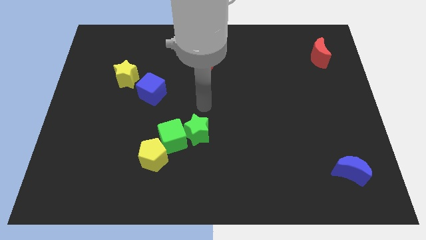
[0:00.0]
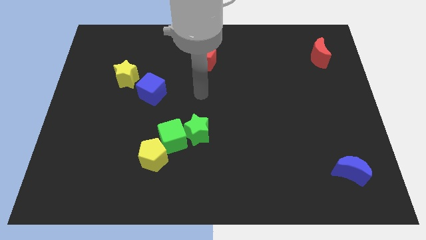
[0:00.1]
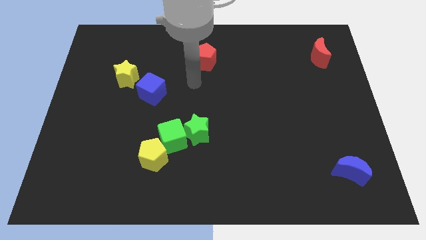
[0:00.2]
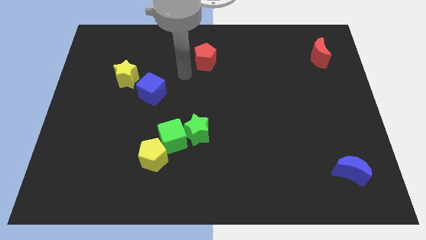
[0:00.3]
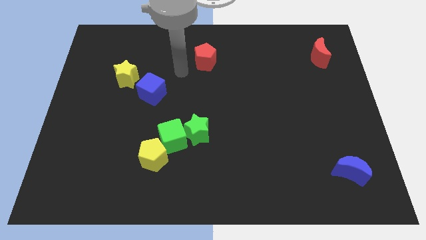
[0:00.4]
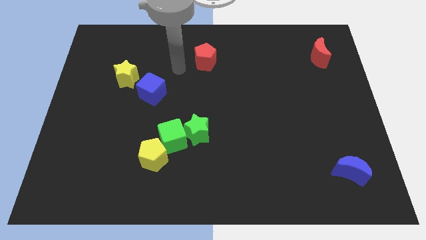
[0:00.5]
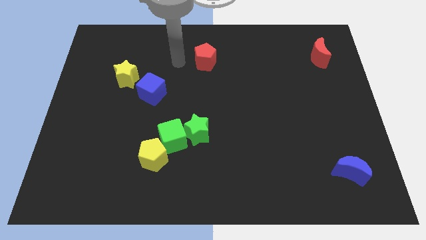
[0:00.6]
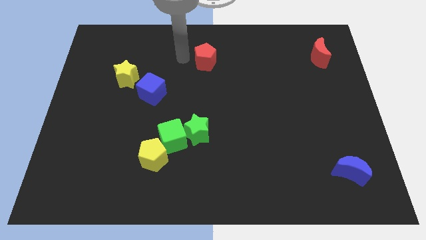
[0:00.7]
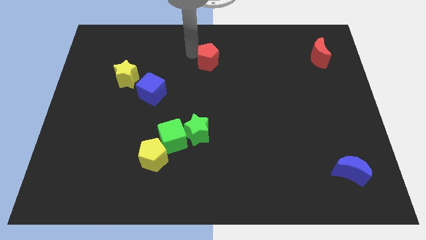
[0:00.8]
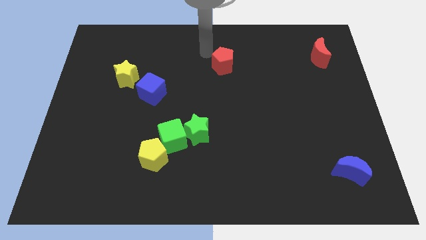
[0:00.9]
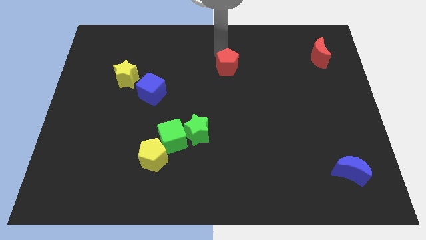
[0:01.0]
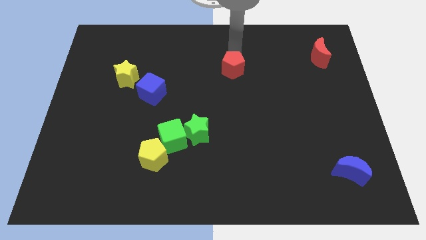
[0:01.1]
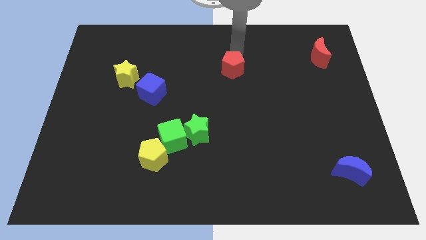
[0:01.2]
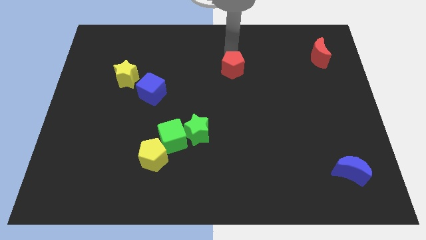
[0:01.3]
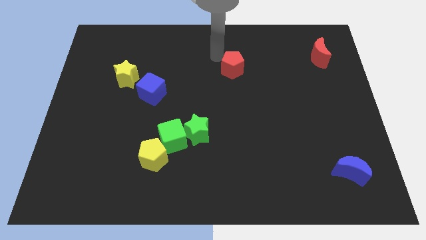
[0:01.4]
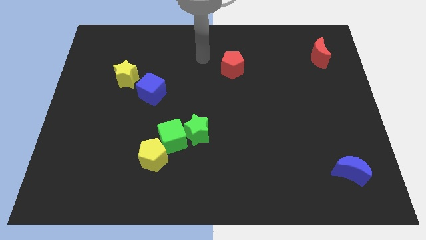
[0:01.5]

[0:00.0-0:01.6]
move the red pentagon parallel to the red crescent

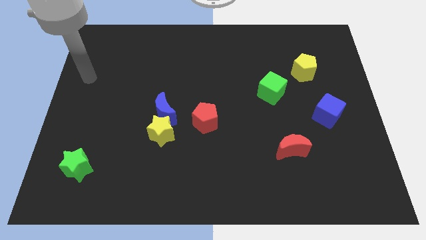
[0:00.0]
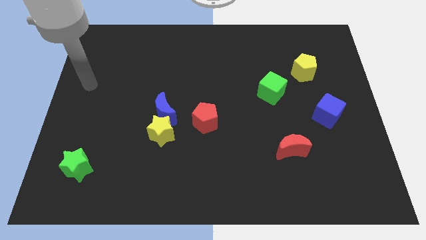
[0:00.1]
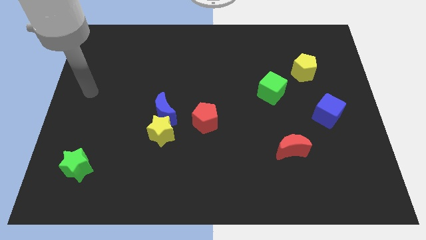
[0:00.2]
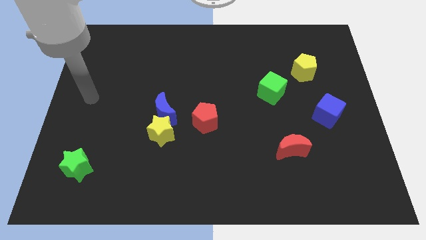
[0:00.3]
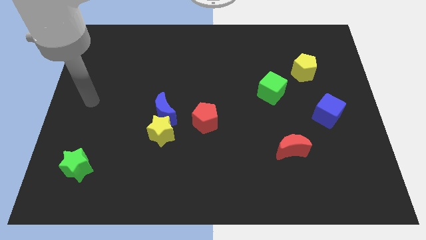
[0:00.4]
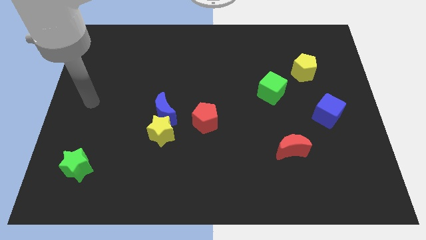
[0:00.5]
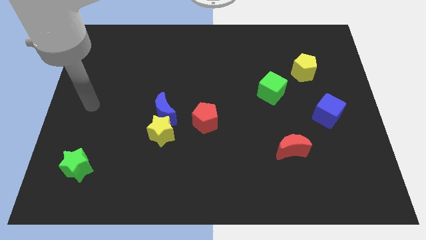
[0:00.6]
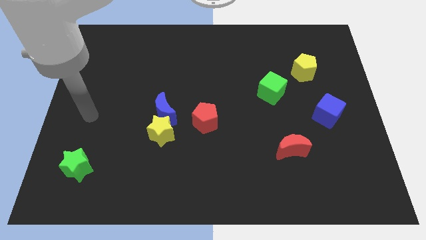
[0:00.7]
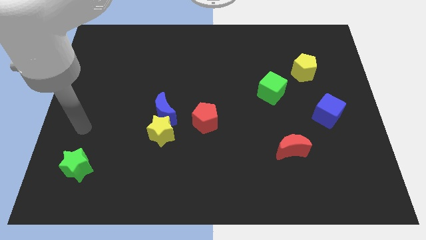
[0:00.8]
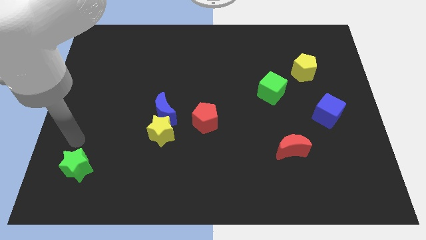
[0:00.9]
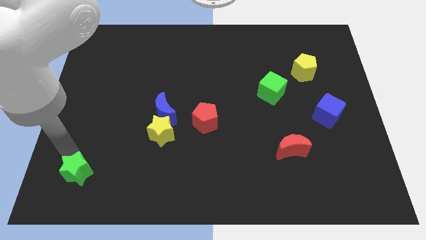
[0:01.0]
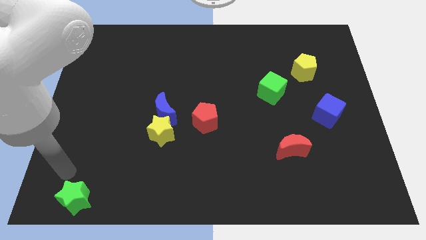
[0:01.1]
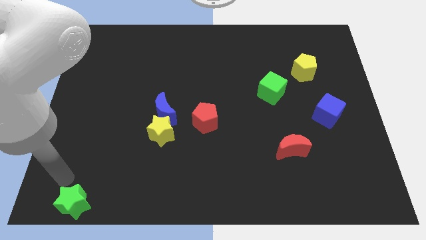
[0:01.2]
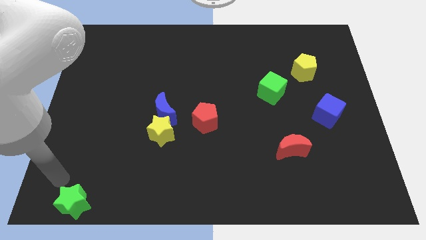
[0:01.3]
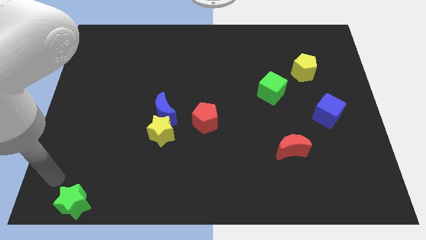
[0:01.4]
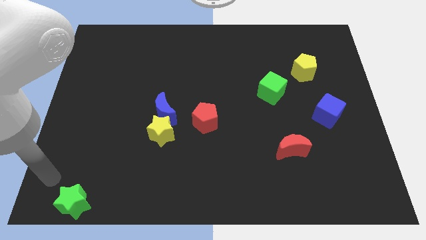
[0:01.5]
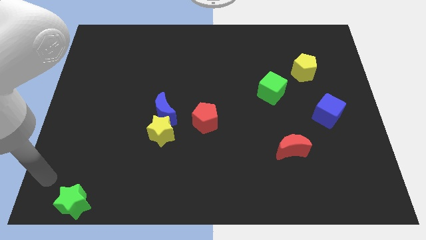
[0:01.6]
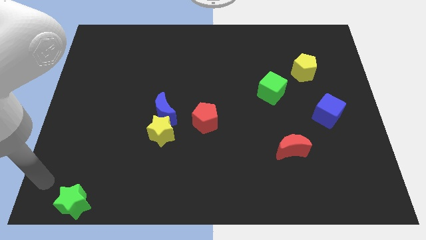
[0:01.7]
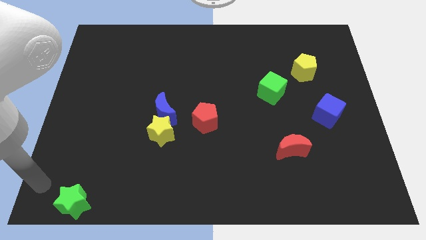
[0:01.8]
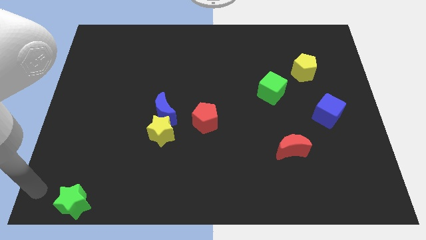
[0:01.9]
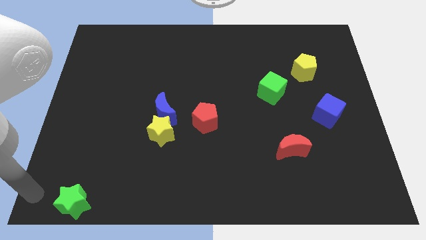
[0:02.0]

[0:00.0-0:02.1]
move green star towards bottom left

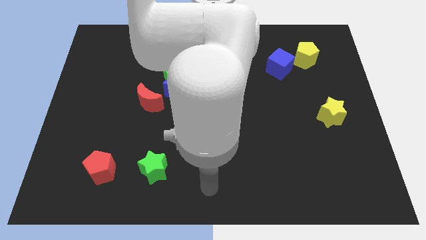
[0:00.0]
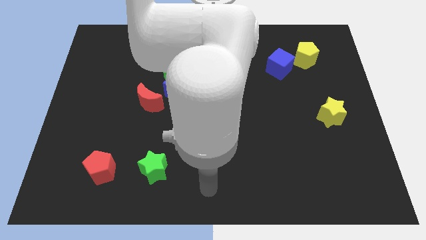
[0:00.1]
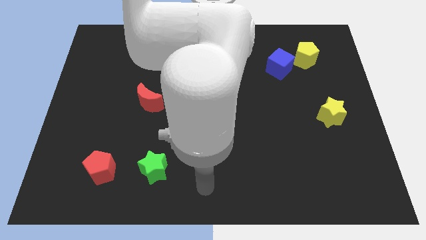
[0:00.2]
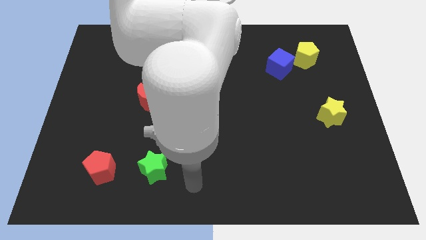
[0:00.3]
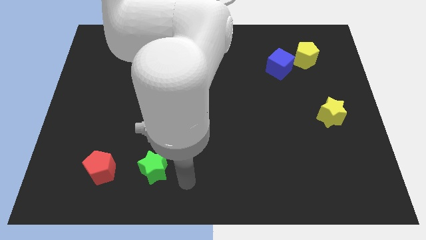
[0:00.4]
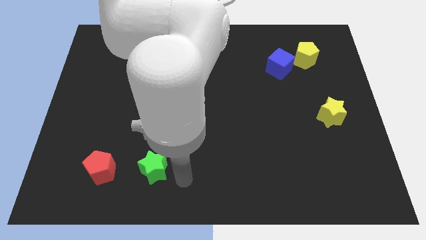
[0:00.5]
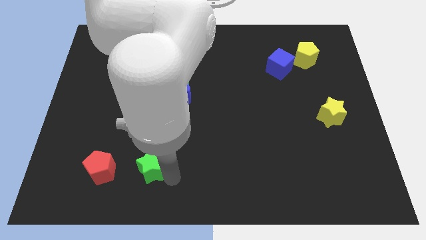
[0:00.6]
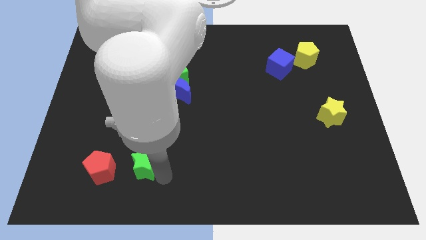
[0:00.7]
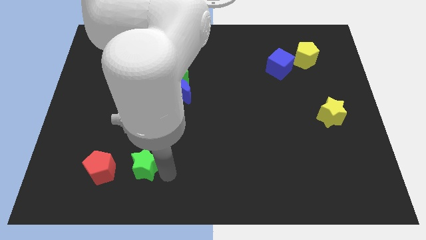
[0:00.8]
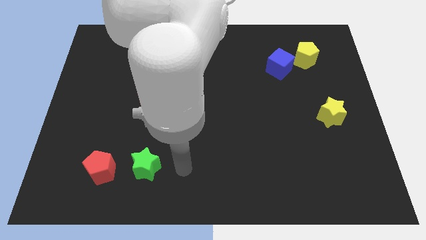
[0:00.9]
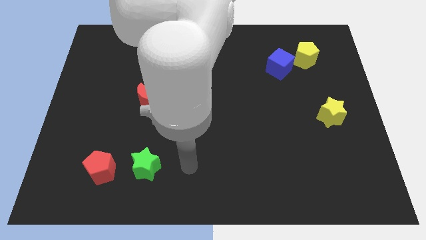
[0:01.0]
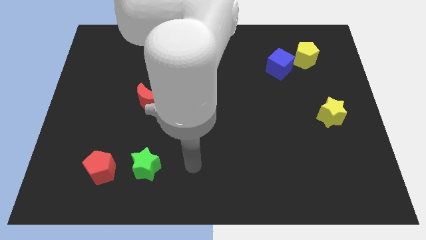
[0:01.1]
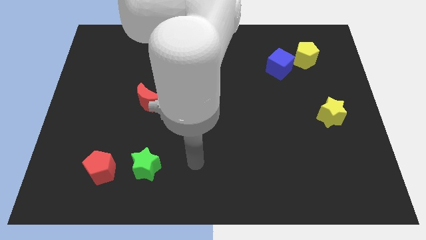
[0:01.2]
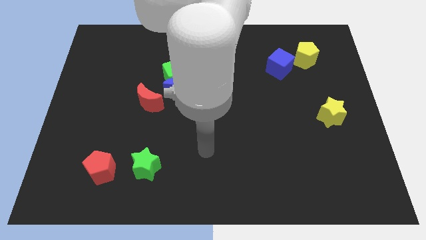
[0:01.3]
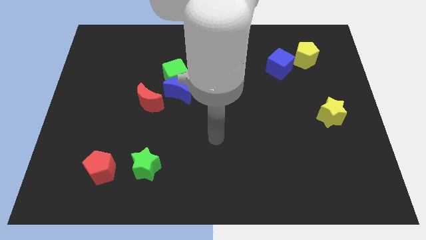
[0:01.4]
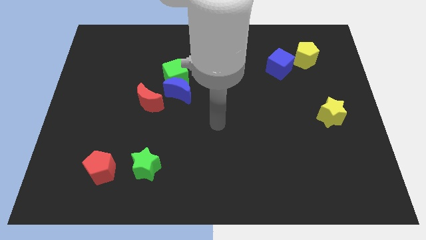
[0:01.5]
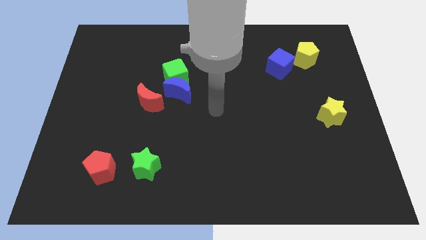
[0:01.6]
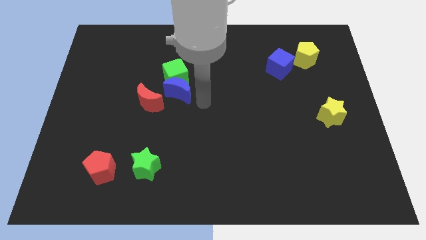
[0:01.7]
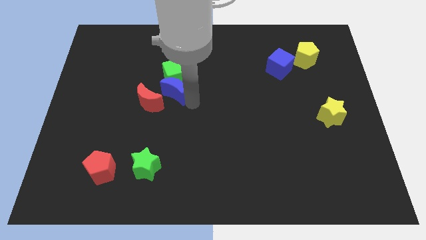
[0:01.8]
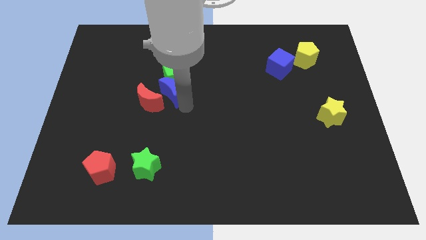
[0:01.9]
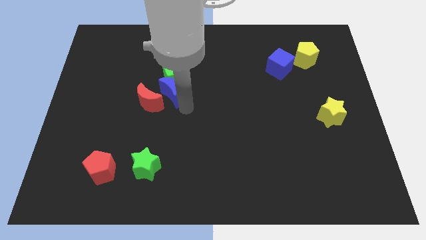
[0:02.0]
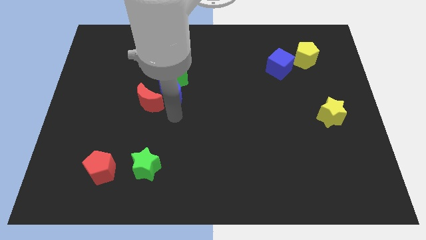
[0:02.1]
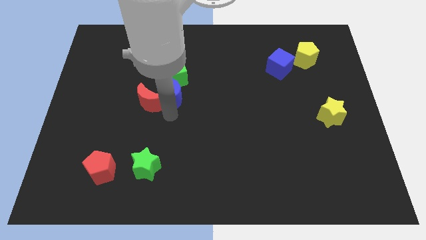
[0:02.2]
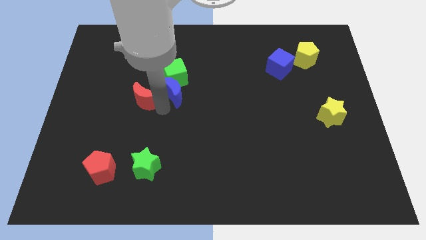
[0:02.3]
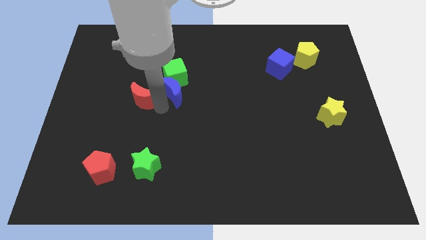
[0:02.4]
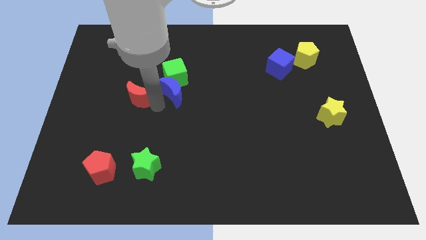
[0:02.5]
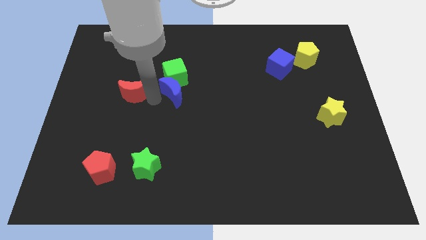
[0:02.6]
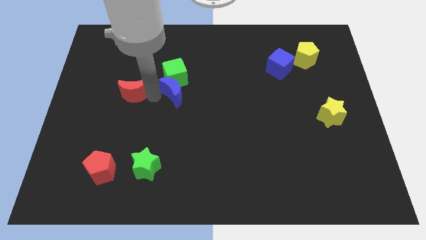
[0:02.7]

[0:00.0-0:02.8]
separate red crescent from blue moon

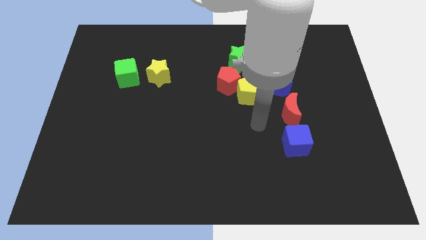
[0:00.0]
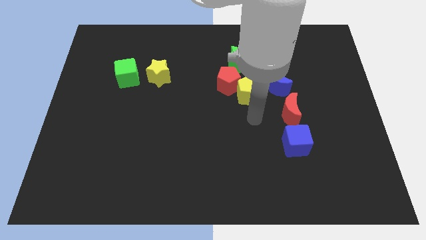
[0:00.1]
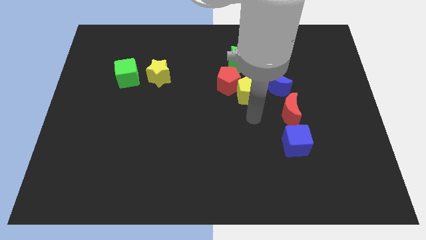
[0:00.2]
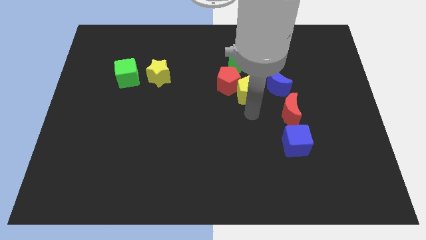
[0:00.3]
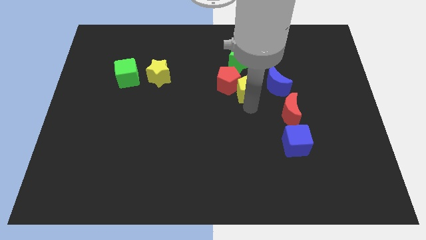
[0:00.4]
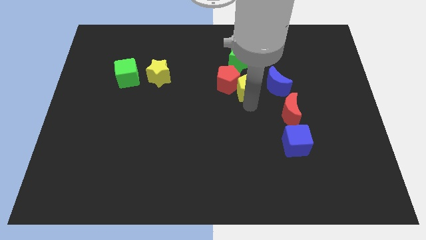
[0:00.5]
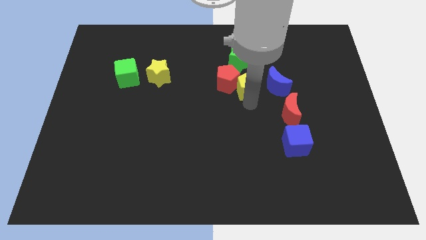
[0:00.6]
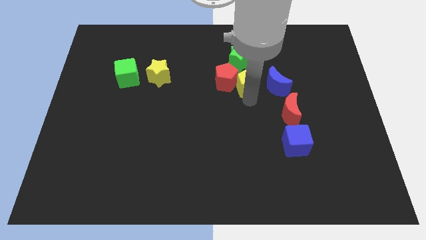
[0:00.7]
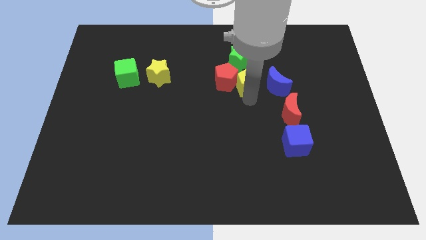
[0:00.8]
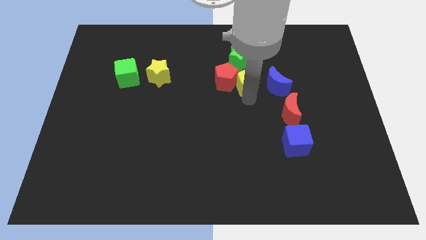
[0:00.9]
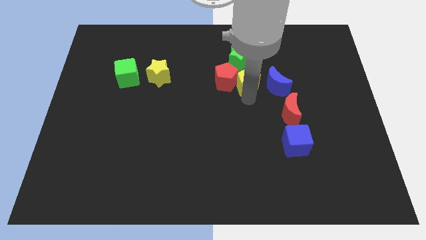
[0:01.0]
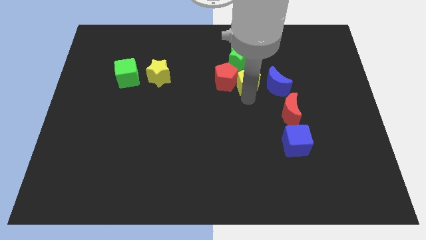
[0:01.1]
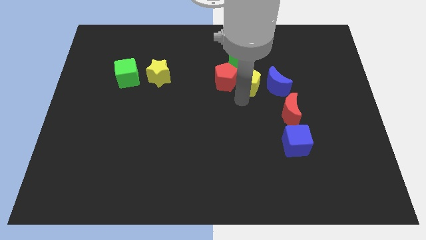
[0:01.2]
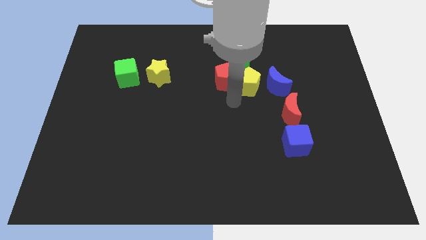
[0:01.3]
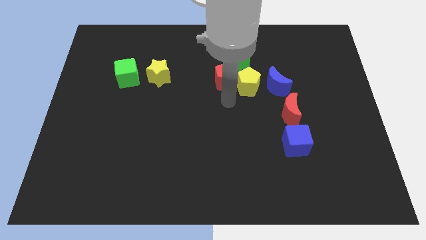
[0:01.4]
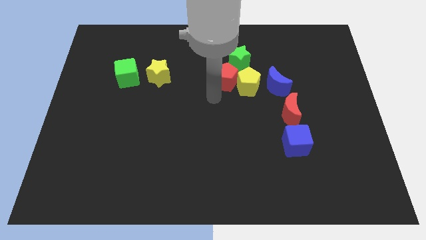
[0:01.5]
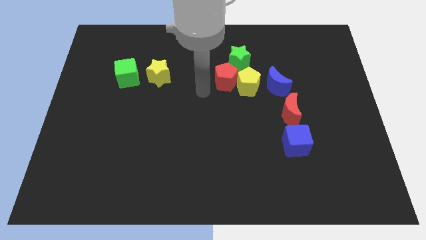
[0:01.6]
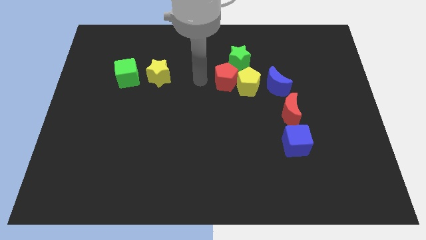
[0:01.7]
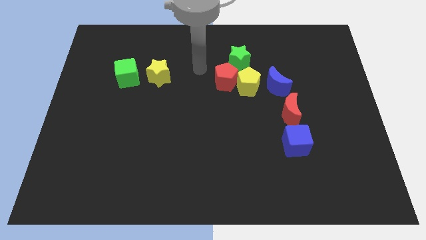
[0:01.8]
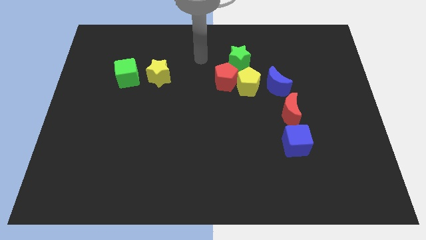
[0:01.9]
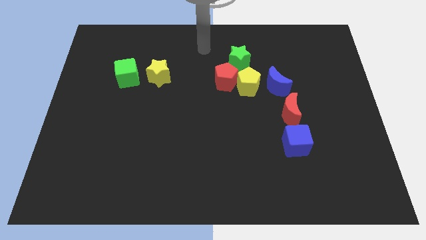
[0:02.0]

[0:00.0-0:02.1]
move your arm into the yellow pentagon

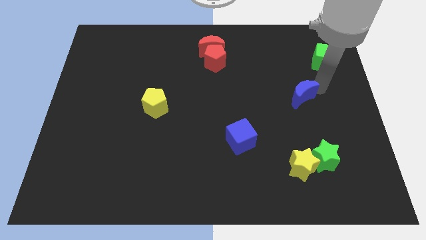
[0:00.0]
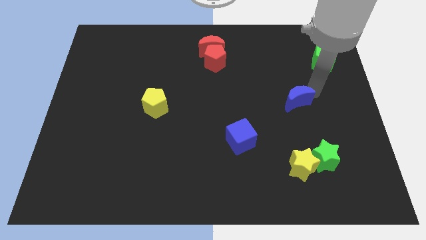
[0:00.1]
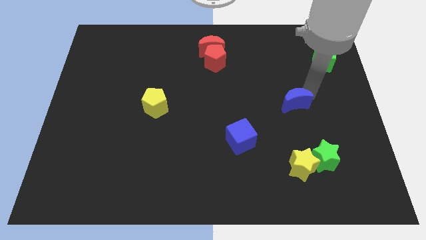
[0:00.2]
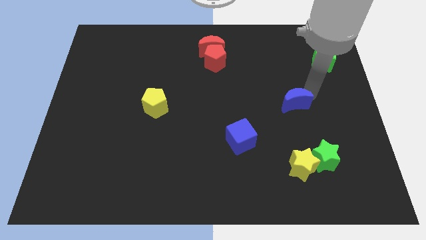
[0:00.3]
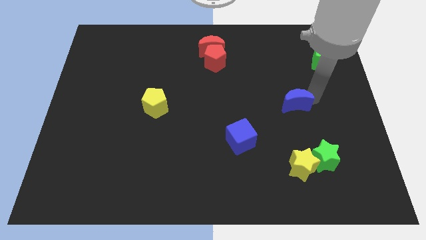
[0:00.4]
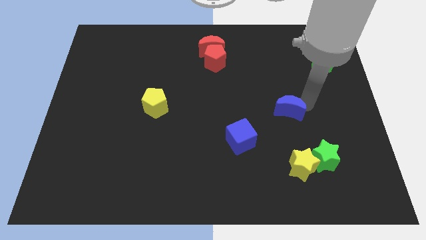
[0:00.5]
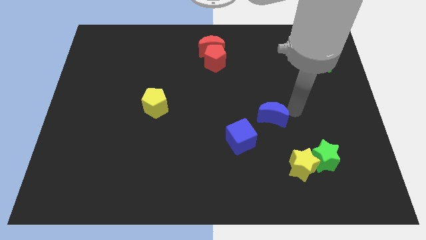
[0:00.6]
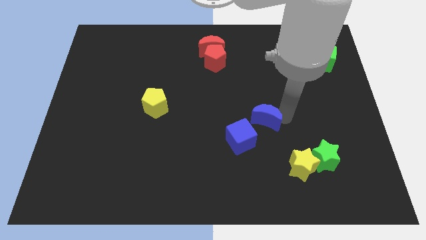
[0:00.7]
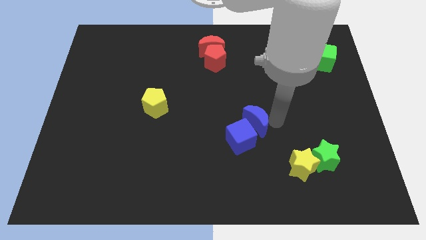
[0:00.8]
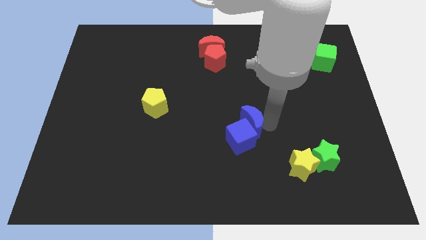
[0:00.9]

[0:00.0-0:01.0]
slide the blue moon to the top right side of the blue cube
